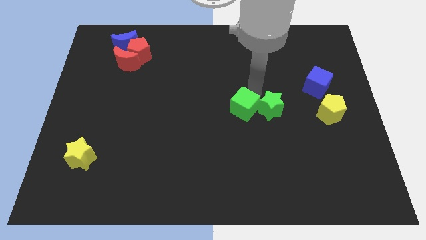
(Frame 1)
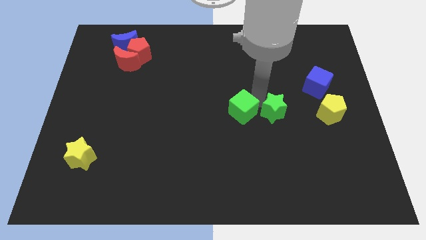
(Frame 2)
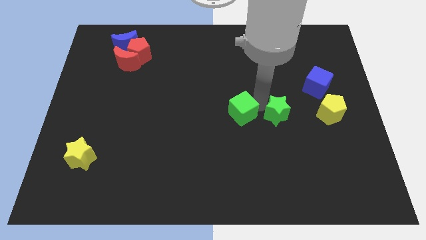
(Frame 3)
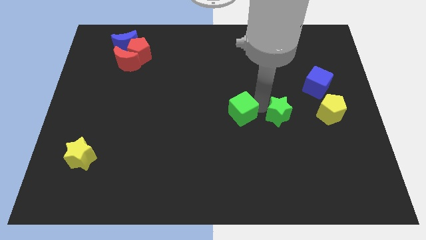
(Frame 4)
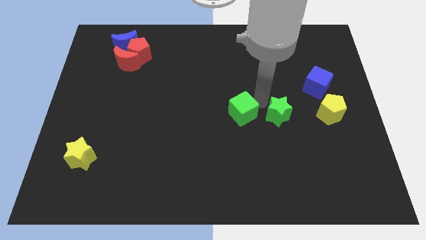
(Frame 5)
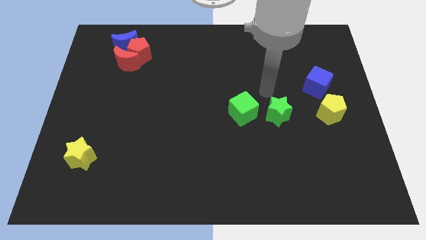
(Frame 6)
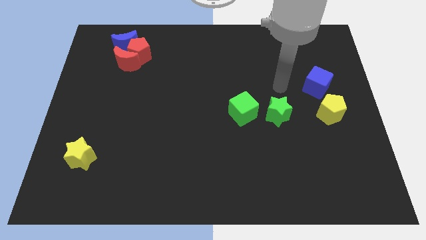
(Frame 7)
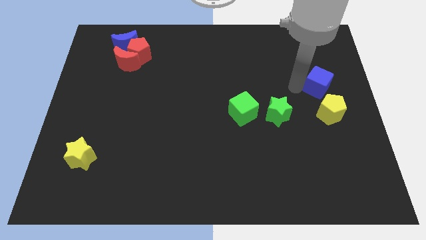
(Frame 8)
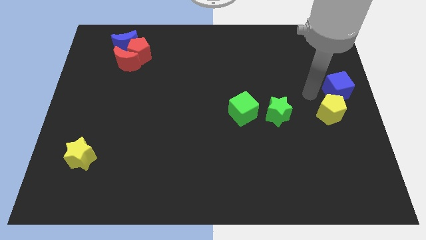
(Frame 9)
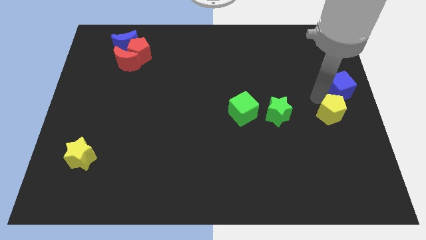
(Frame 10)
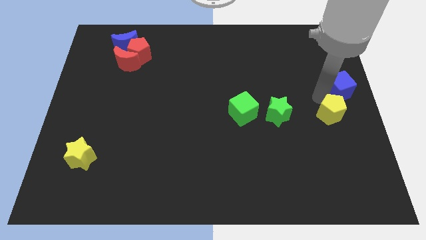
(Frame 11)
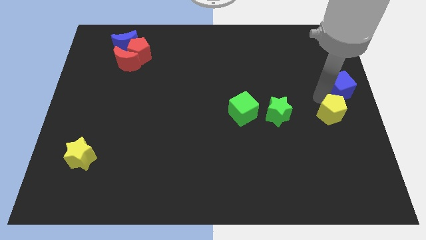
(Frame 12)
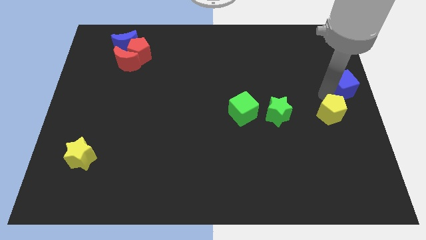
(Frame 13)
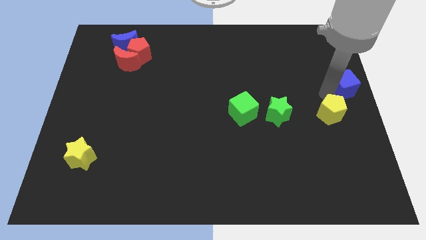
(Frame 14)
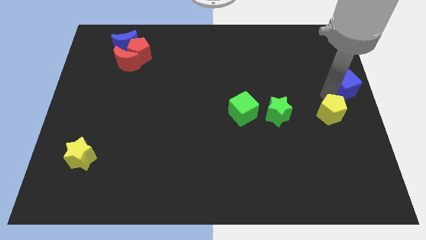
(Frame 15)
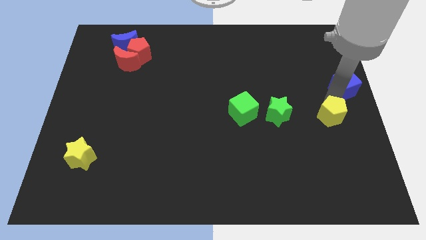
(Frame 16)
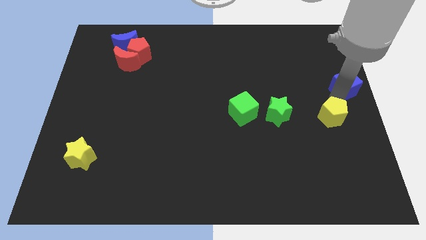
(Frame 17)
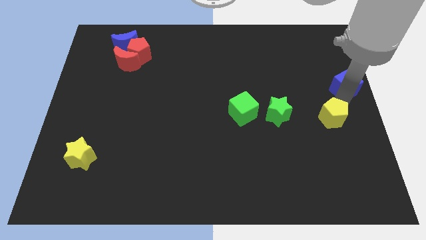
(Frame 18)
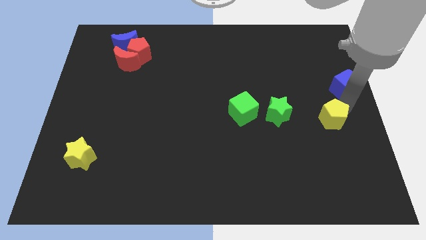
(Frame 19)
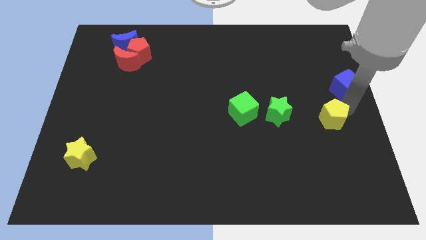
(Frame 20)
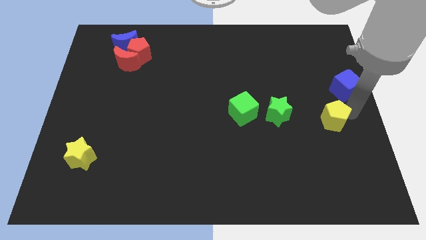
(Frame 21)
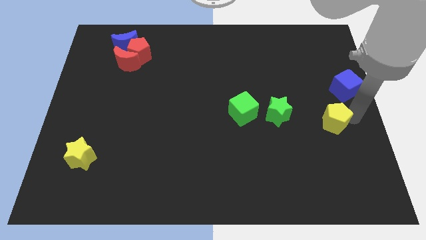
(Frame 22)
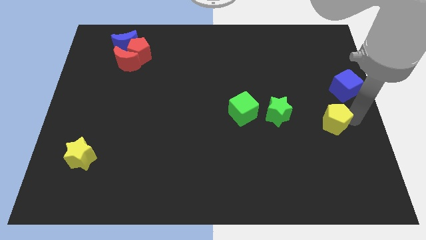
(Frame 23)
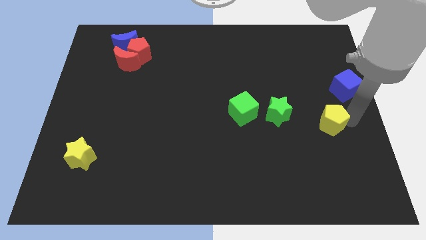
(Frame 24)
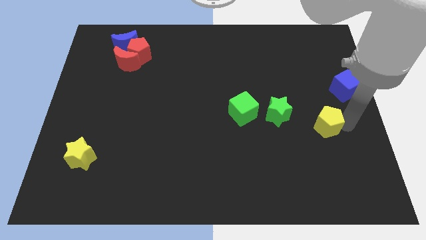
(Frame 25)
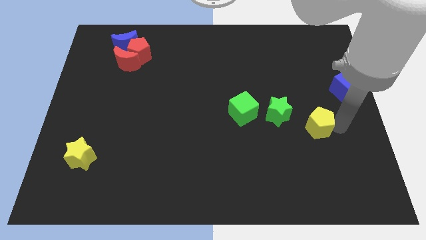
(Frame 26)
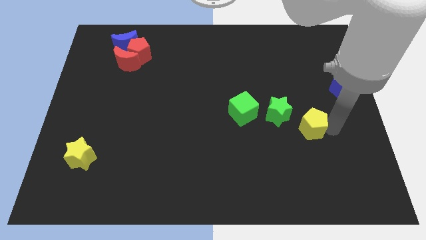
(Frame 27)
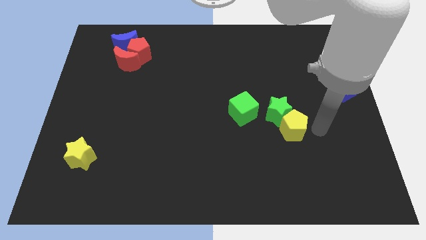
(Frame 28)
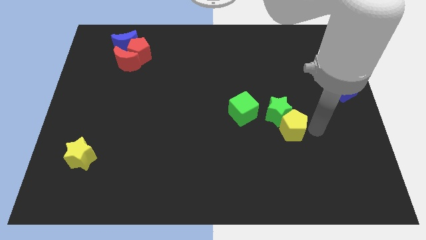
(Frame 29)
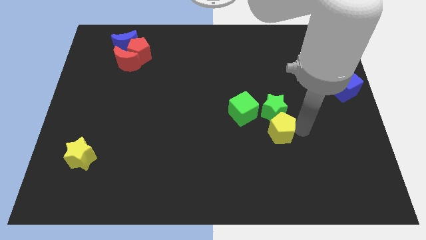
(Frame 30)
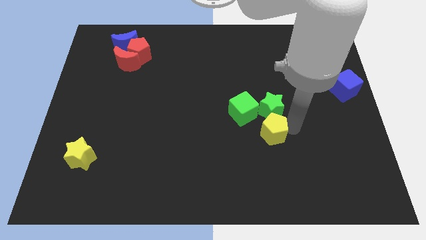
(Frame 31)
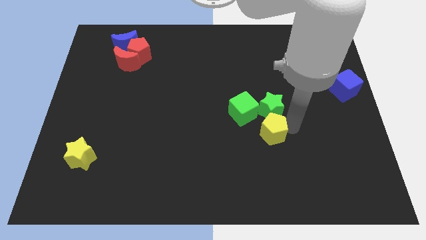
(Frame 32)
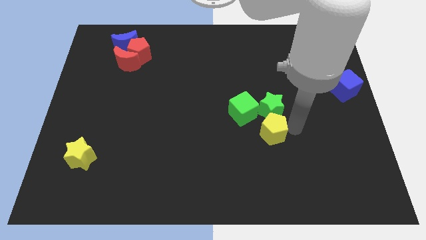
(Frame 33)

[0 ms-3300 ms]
place the yellow pentagon to the bottom of the green star

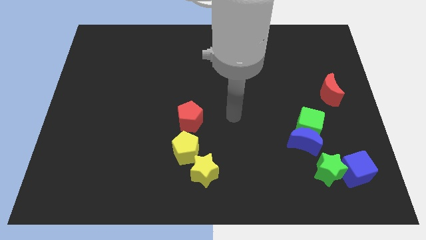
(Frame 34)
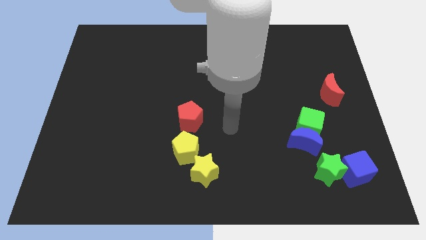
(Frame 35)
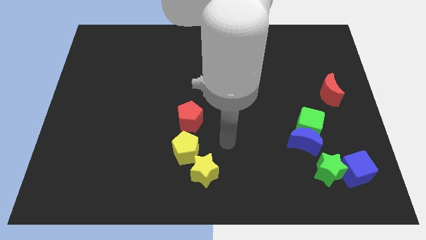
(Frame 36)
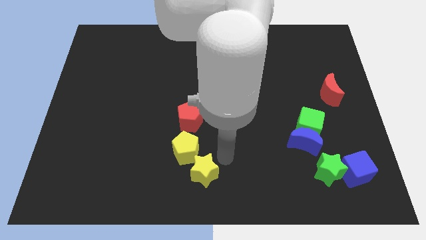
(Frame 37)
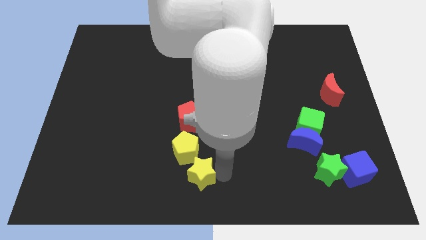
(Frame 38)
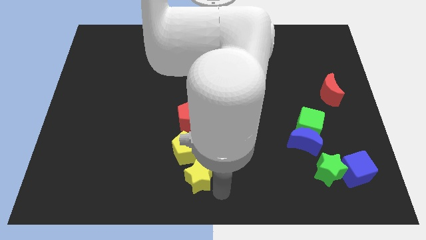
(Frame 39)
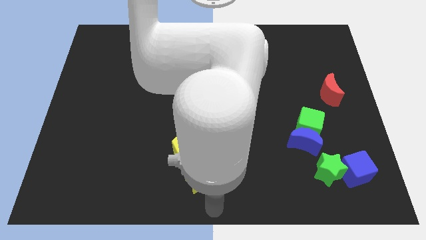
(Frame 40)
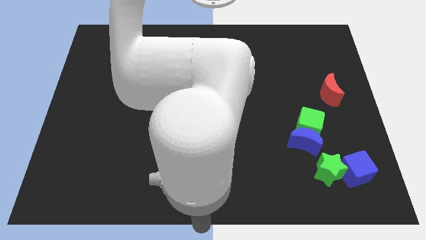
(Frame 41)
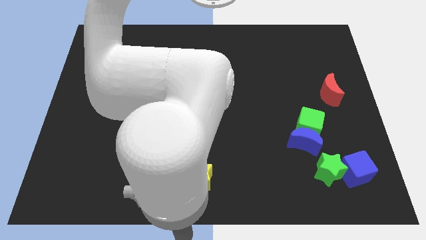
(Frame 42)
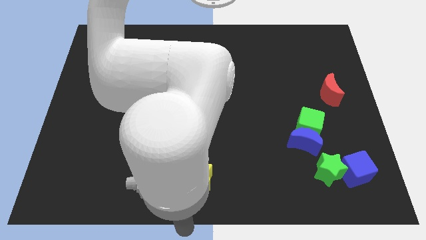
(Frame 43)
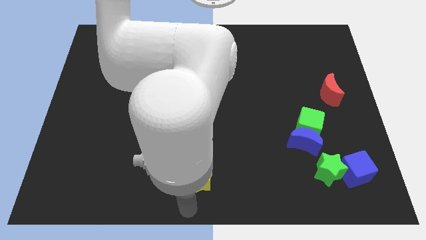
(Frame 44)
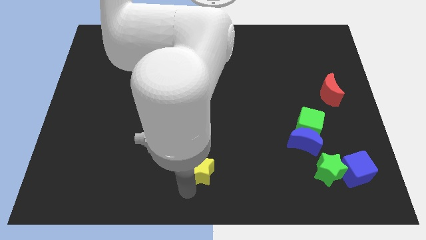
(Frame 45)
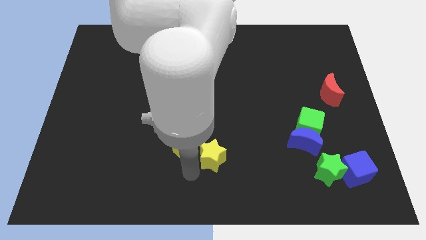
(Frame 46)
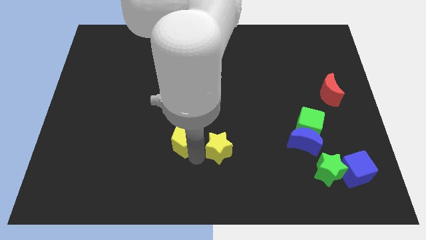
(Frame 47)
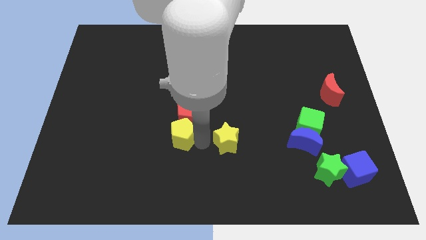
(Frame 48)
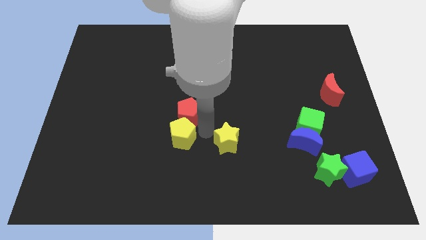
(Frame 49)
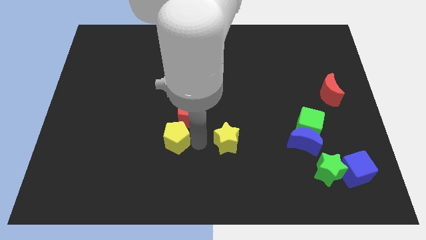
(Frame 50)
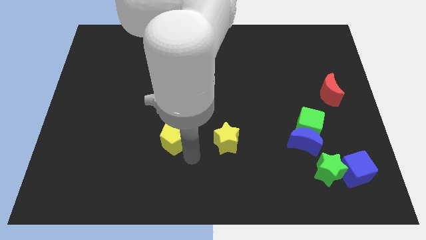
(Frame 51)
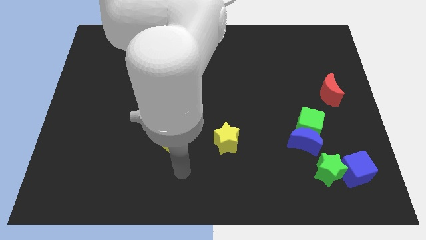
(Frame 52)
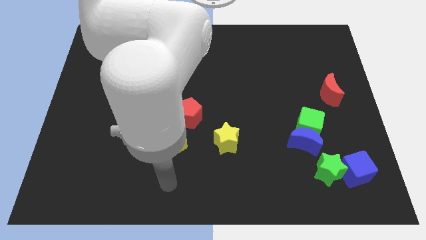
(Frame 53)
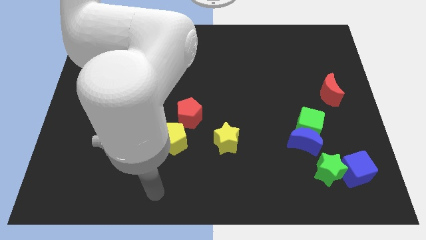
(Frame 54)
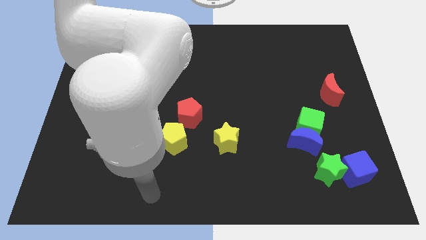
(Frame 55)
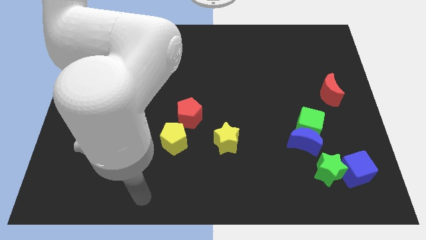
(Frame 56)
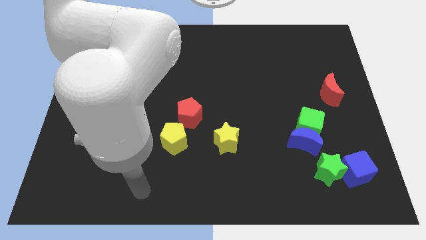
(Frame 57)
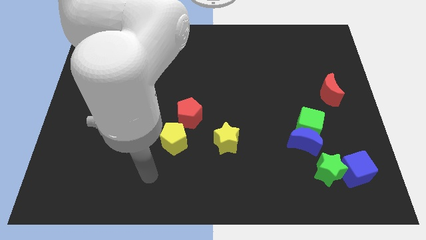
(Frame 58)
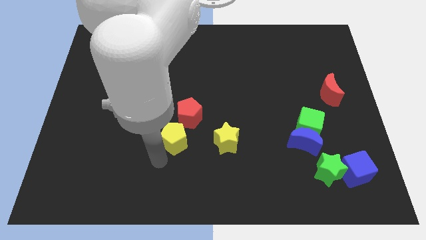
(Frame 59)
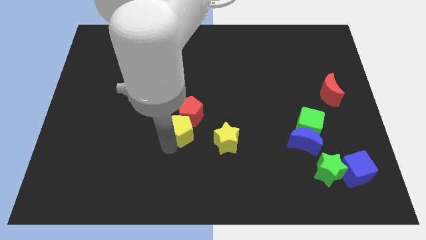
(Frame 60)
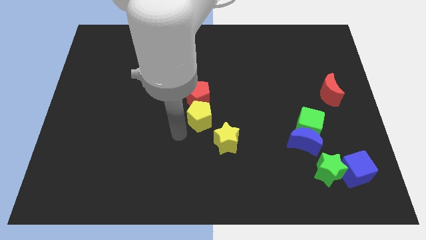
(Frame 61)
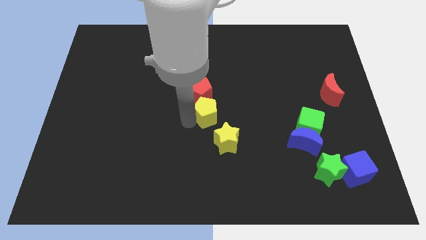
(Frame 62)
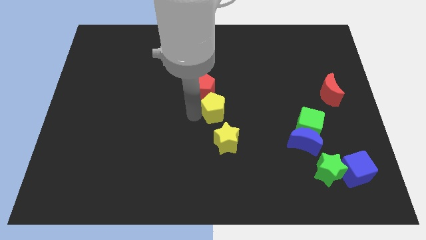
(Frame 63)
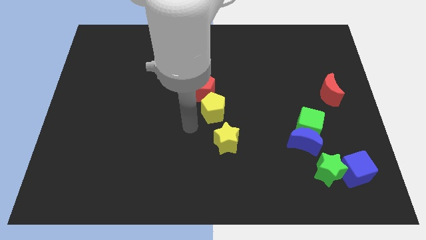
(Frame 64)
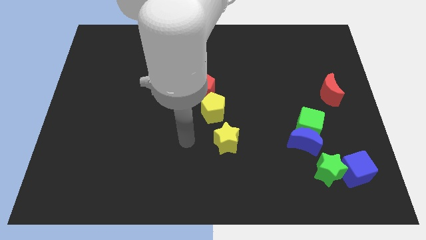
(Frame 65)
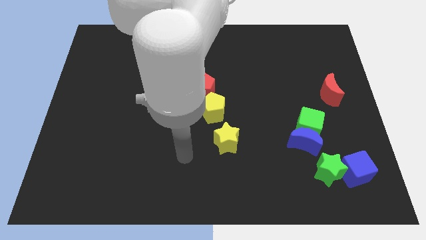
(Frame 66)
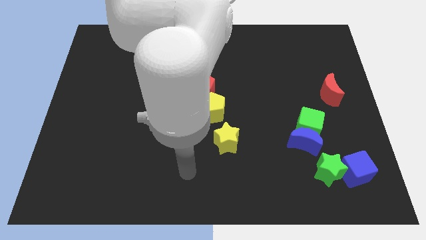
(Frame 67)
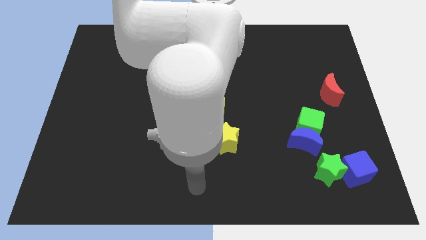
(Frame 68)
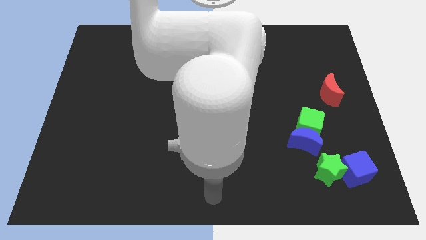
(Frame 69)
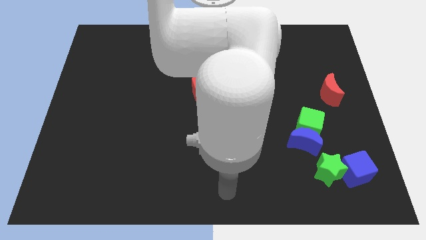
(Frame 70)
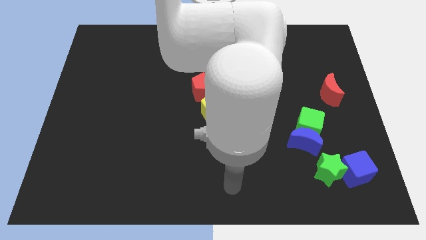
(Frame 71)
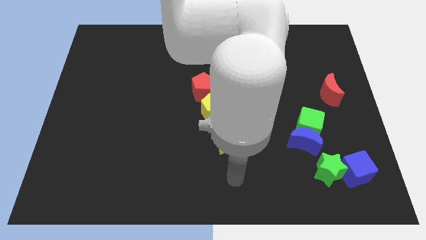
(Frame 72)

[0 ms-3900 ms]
separate the yellow star and red pentagon

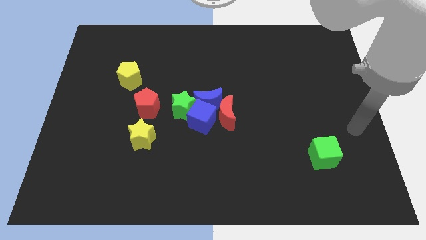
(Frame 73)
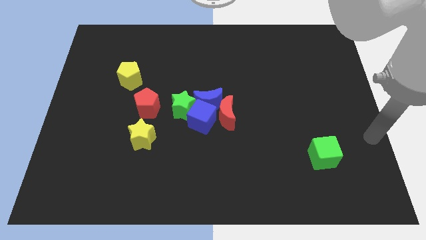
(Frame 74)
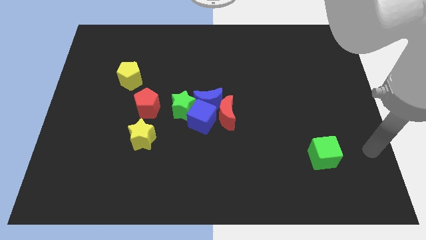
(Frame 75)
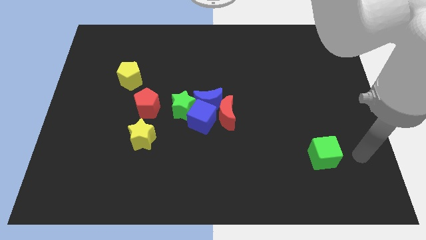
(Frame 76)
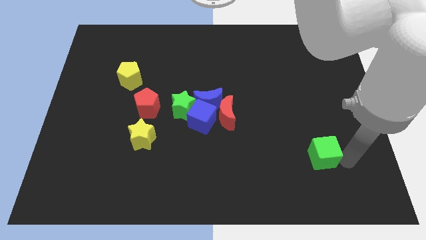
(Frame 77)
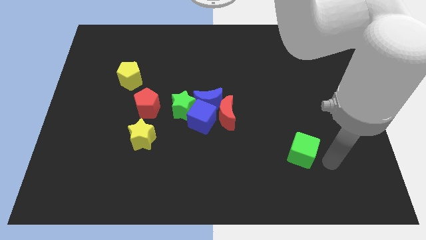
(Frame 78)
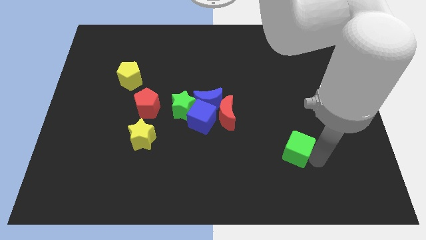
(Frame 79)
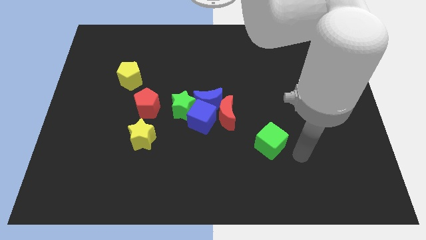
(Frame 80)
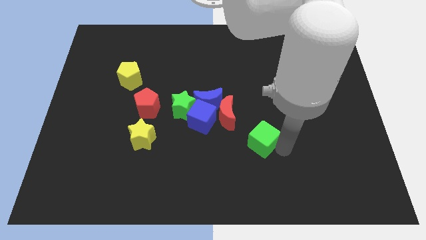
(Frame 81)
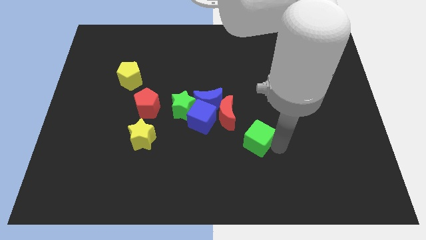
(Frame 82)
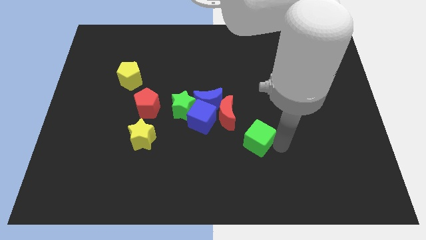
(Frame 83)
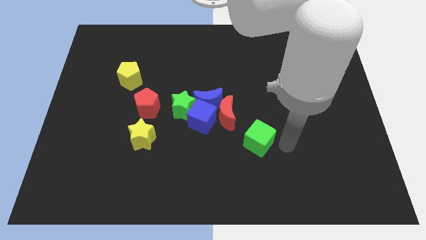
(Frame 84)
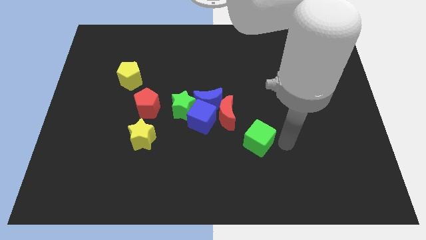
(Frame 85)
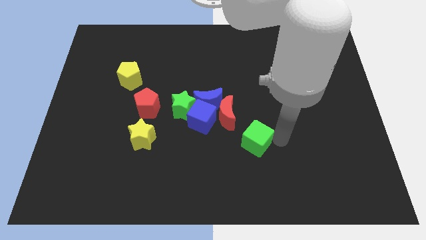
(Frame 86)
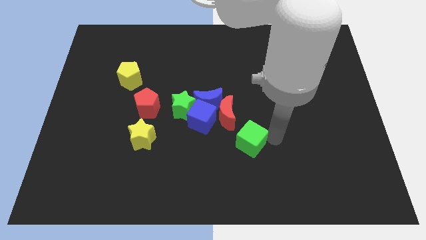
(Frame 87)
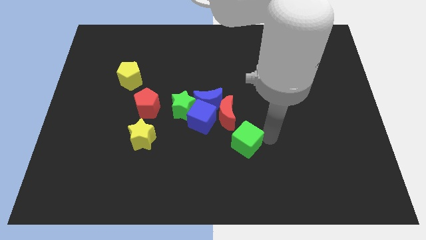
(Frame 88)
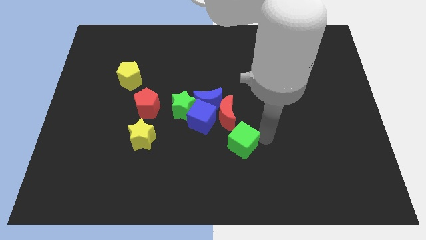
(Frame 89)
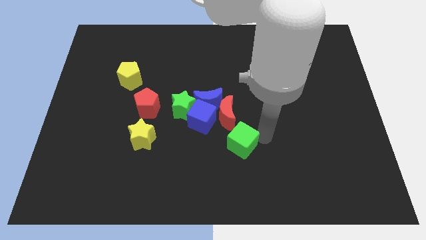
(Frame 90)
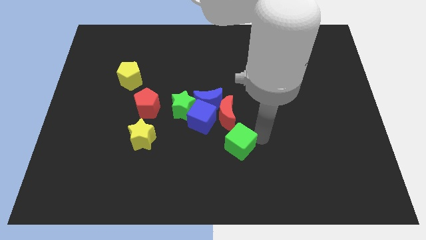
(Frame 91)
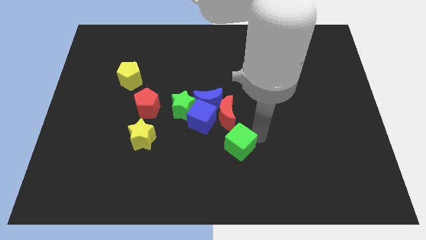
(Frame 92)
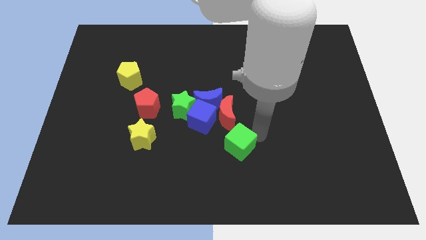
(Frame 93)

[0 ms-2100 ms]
push green cube to the bottom of red crescent

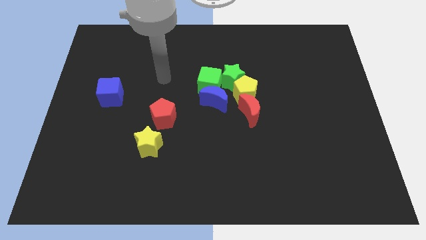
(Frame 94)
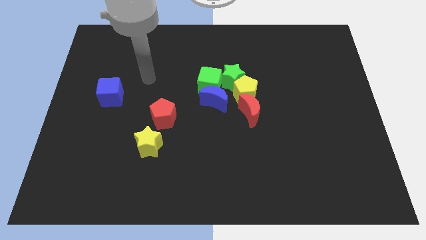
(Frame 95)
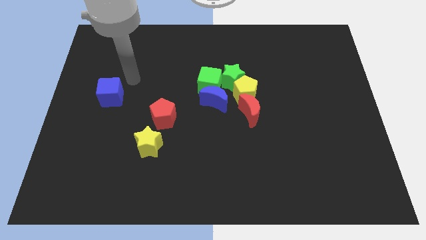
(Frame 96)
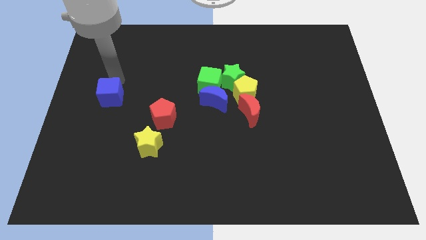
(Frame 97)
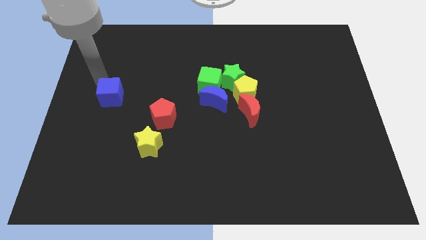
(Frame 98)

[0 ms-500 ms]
point your arm above the blue cube
